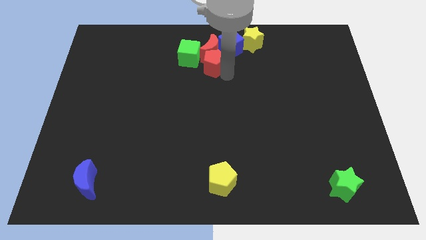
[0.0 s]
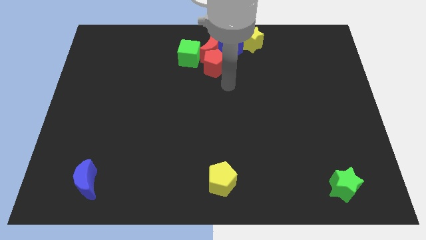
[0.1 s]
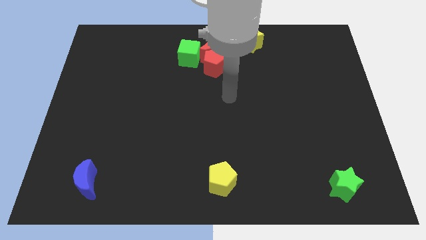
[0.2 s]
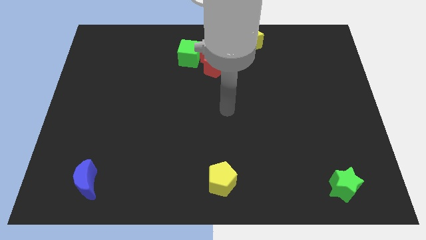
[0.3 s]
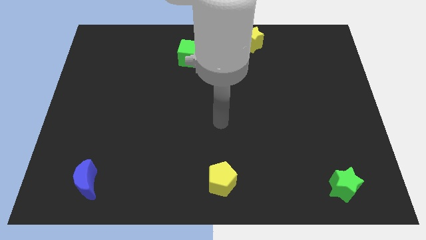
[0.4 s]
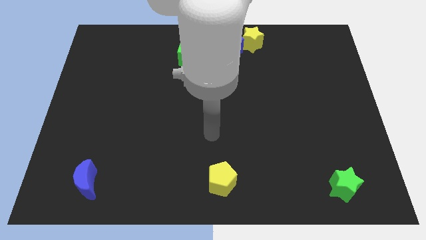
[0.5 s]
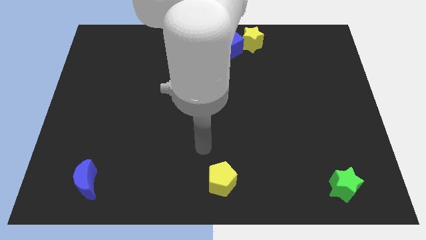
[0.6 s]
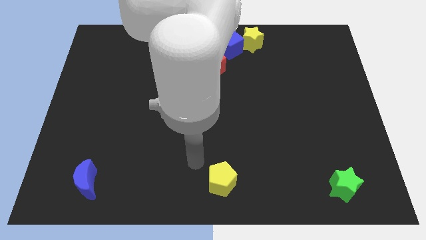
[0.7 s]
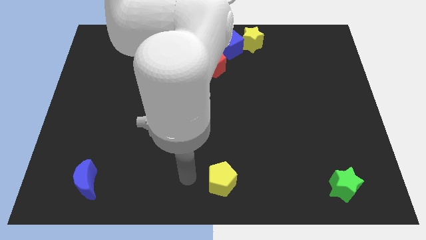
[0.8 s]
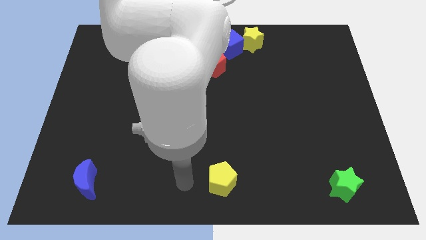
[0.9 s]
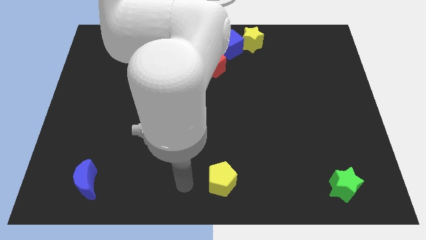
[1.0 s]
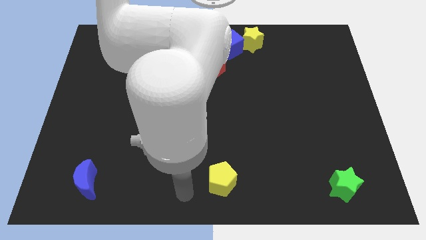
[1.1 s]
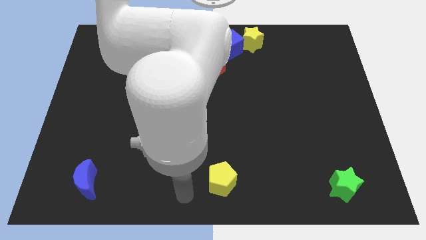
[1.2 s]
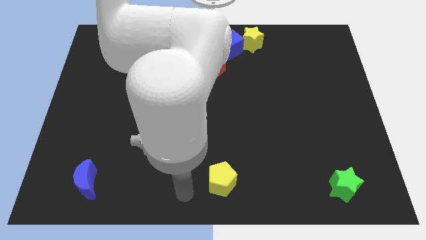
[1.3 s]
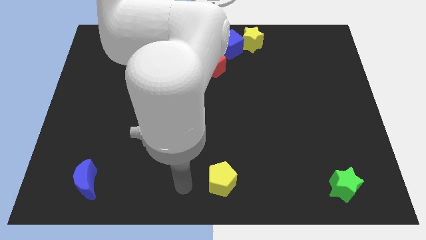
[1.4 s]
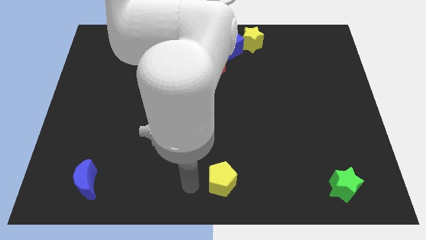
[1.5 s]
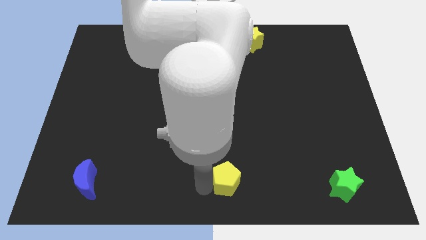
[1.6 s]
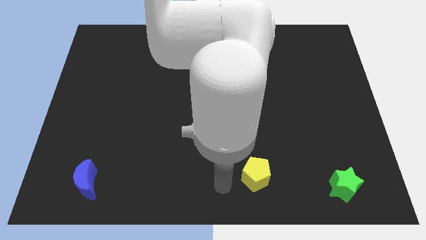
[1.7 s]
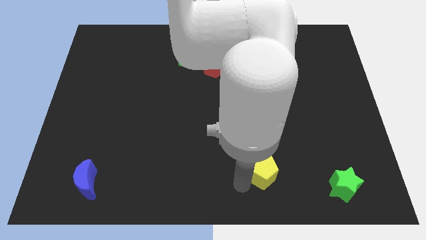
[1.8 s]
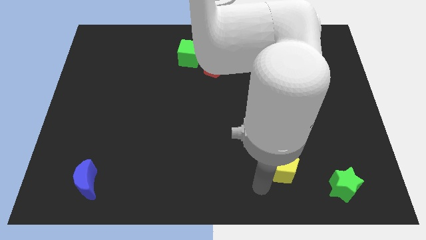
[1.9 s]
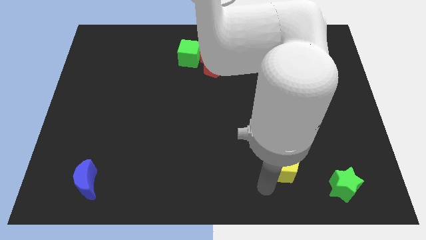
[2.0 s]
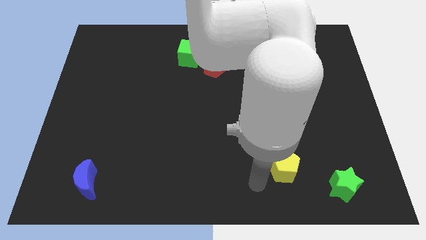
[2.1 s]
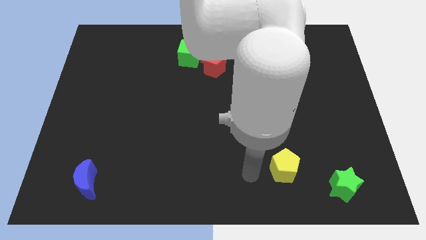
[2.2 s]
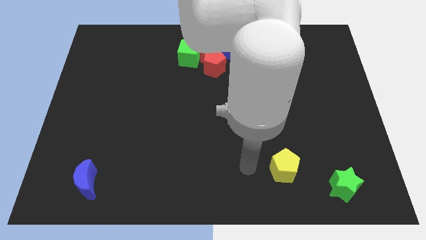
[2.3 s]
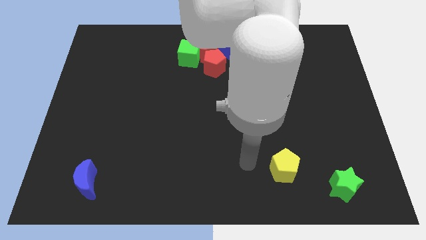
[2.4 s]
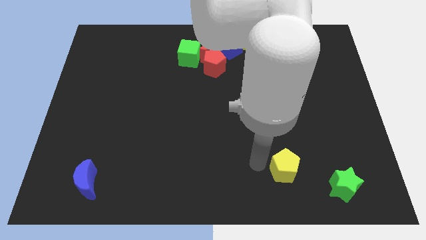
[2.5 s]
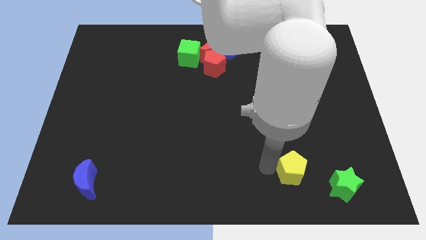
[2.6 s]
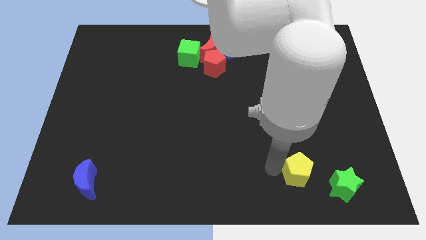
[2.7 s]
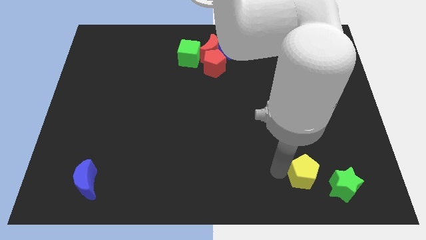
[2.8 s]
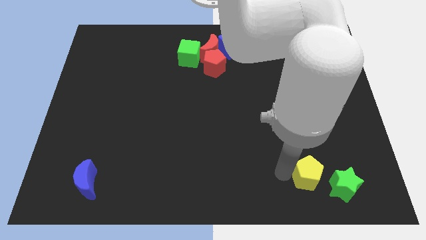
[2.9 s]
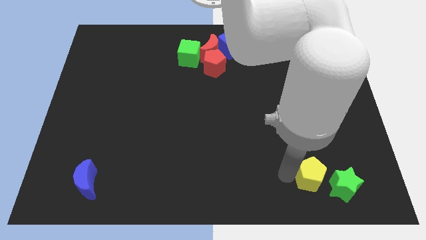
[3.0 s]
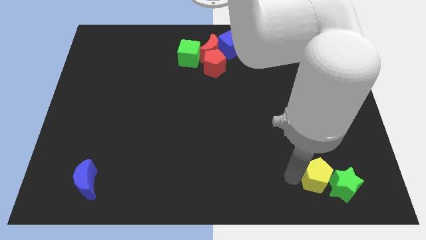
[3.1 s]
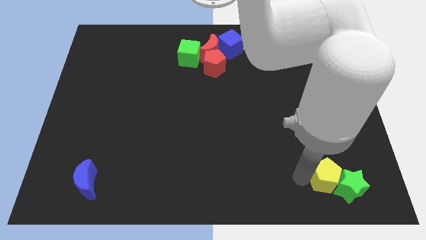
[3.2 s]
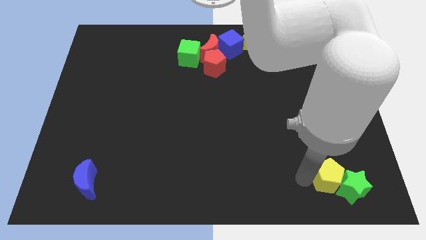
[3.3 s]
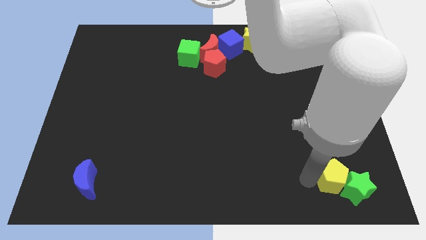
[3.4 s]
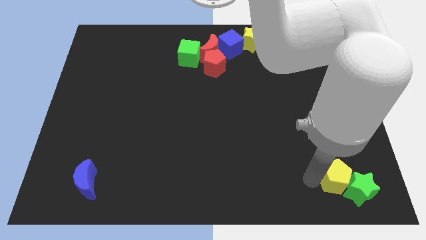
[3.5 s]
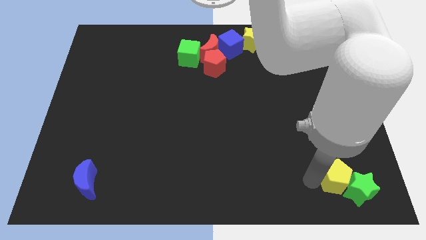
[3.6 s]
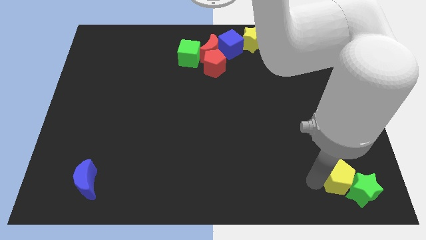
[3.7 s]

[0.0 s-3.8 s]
push the yellow pentagon into the left side of the green star

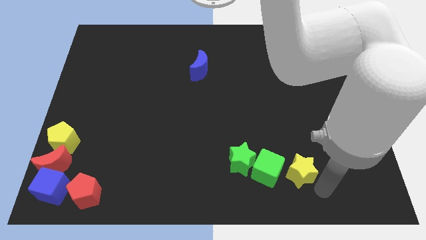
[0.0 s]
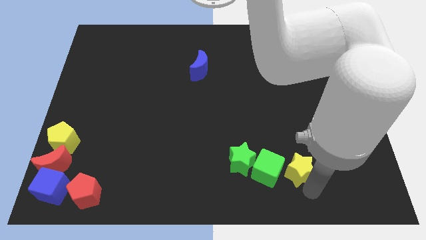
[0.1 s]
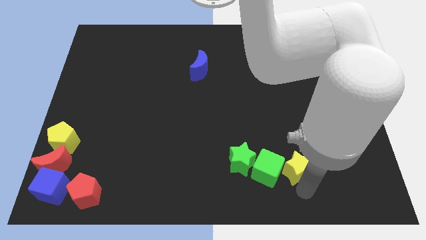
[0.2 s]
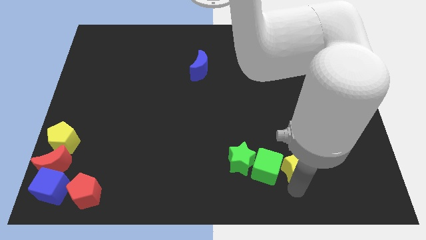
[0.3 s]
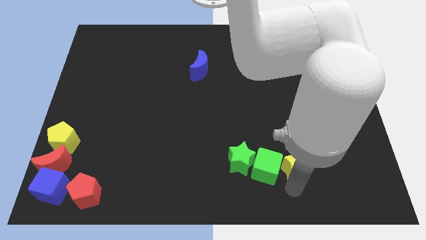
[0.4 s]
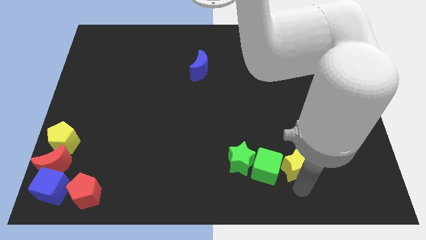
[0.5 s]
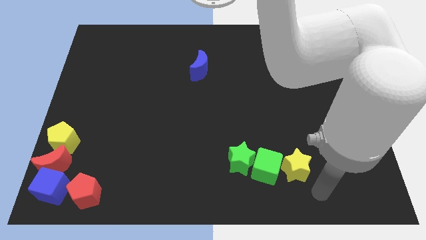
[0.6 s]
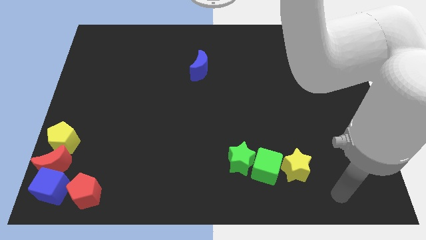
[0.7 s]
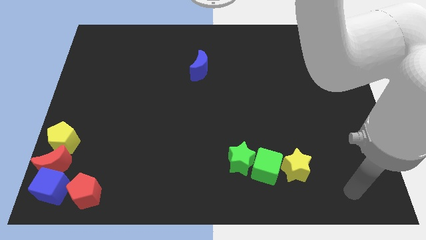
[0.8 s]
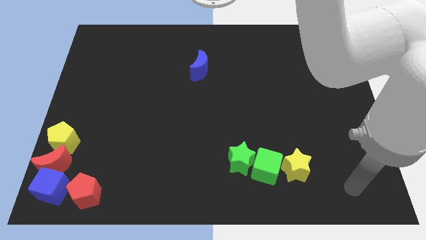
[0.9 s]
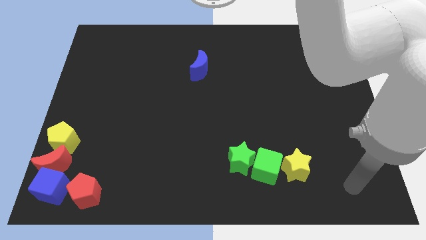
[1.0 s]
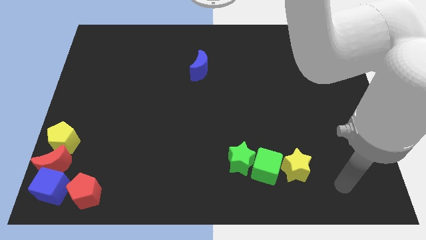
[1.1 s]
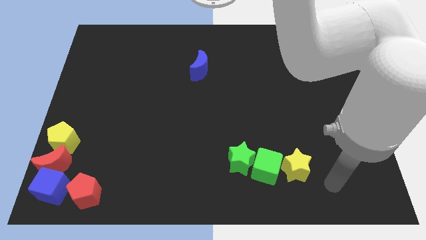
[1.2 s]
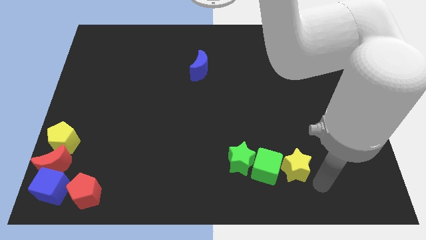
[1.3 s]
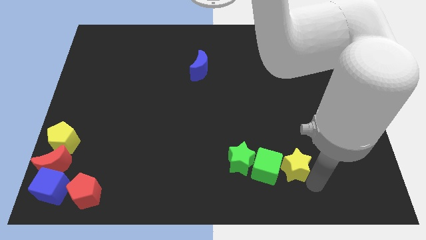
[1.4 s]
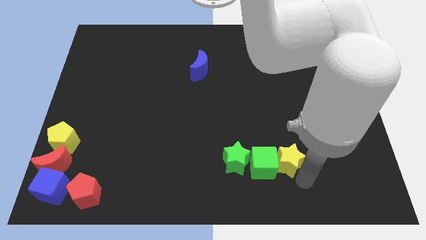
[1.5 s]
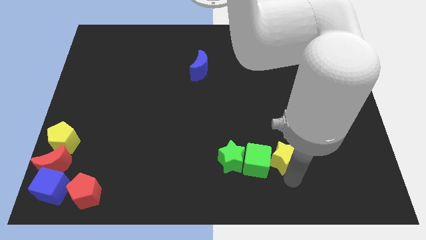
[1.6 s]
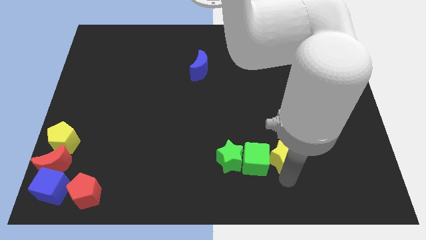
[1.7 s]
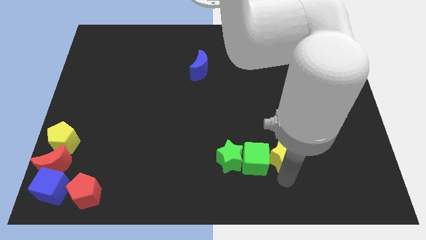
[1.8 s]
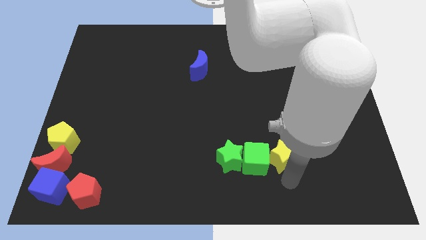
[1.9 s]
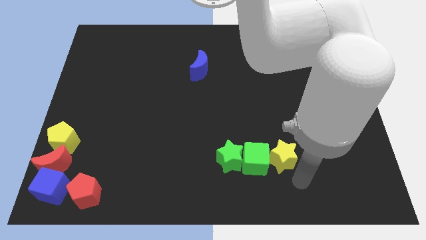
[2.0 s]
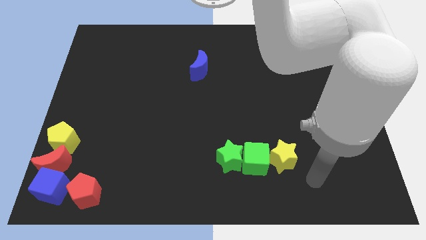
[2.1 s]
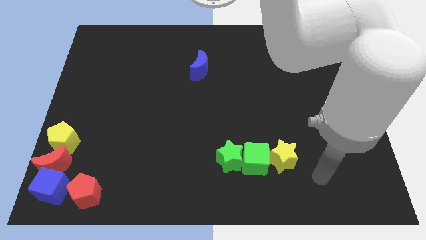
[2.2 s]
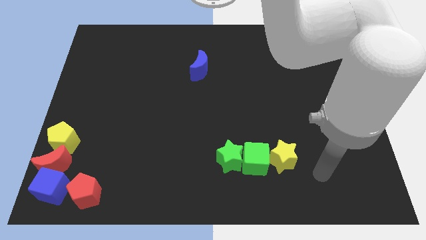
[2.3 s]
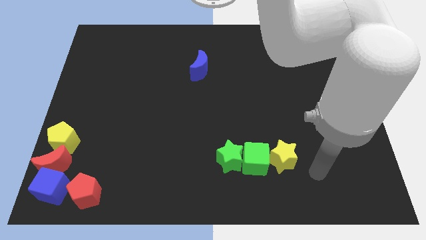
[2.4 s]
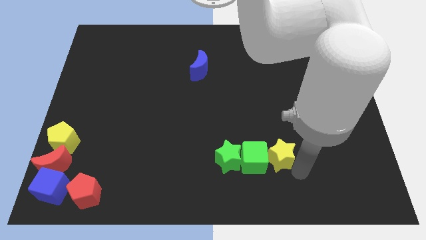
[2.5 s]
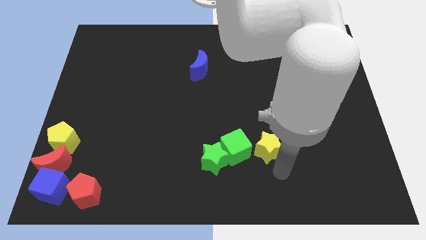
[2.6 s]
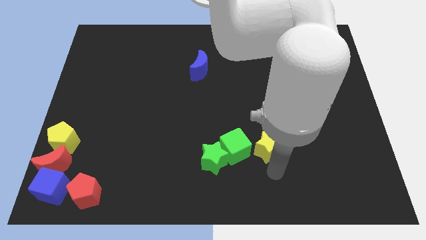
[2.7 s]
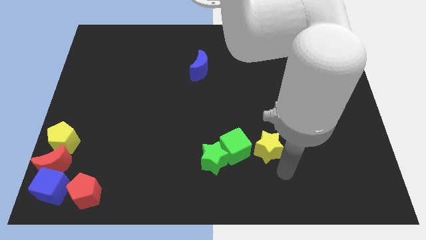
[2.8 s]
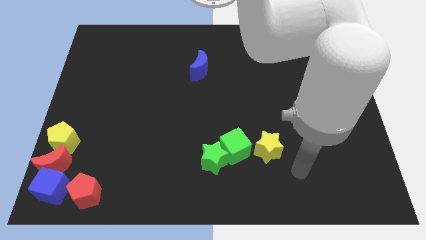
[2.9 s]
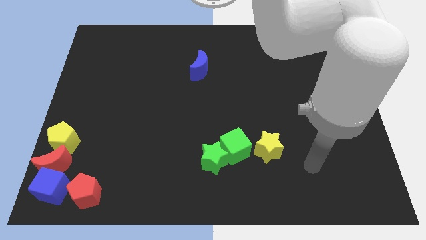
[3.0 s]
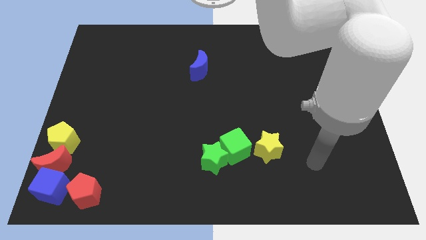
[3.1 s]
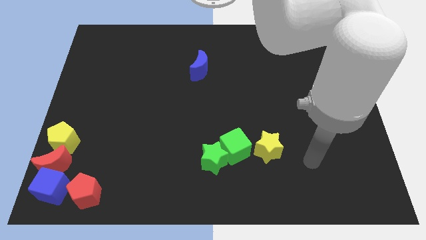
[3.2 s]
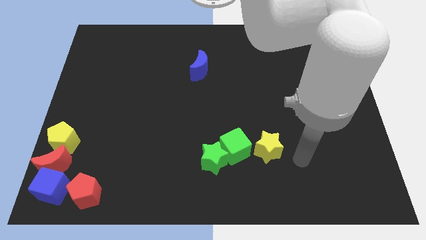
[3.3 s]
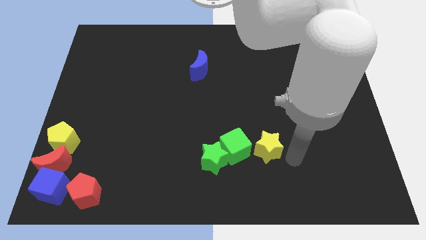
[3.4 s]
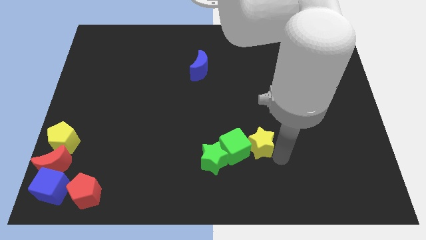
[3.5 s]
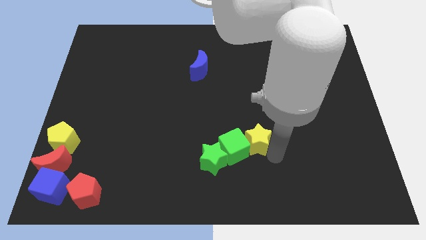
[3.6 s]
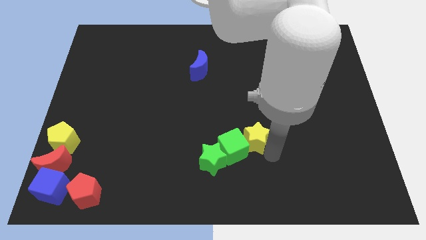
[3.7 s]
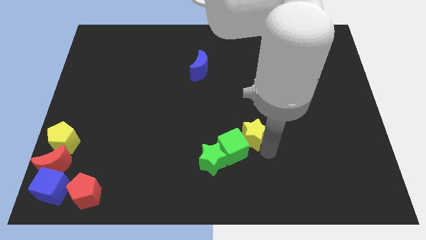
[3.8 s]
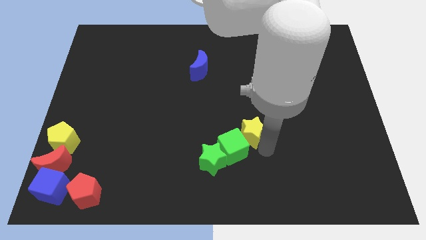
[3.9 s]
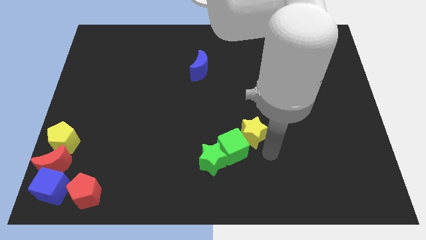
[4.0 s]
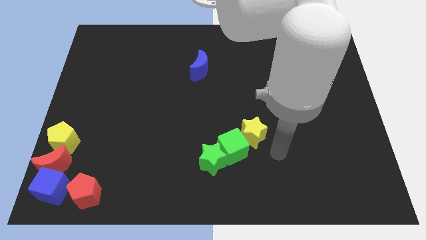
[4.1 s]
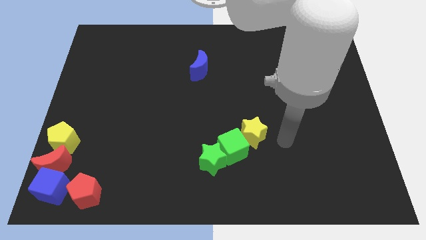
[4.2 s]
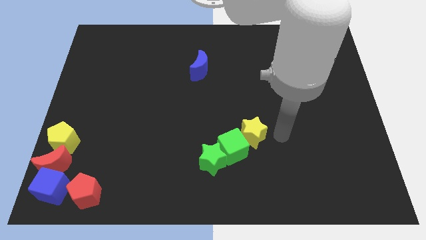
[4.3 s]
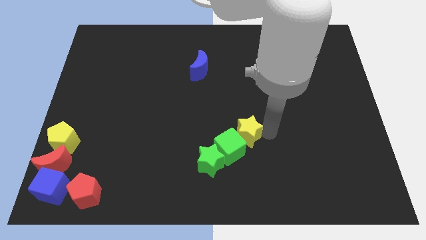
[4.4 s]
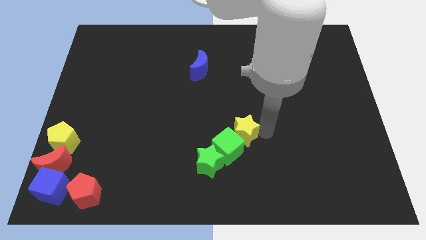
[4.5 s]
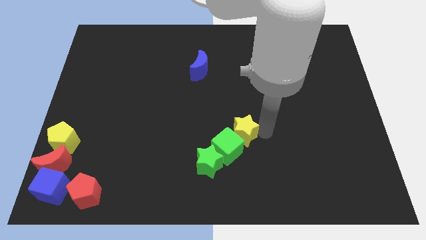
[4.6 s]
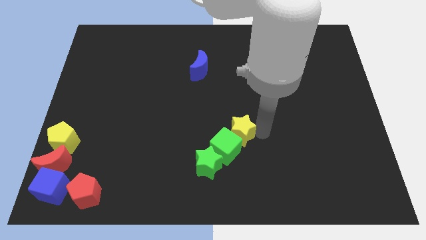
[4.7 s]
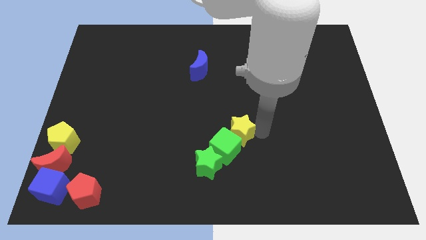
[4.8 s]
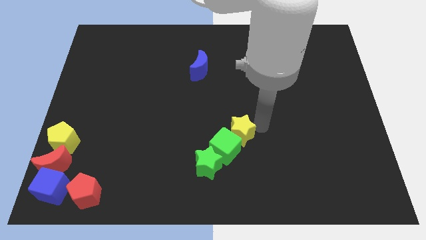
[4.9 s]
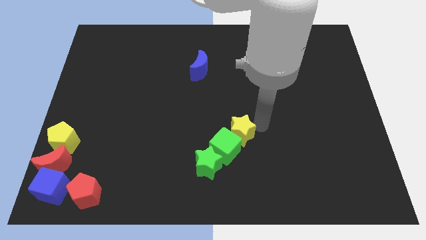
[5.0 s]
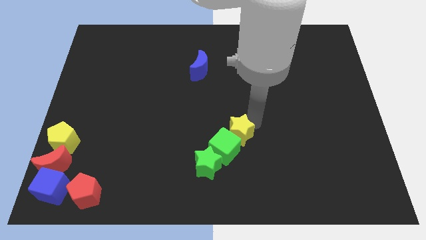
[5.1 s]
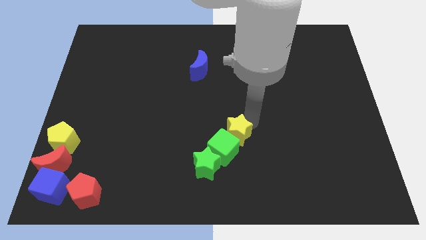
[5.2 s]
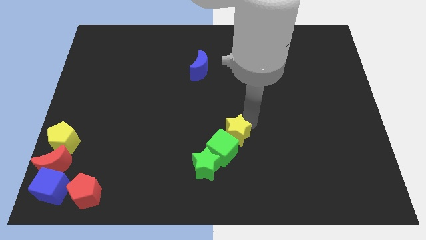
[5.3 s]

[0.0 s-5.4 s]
slightly move the yellow star along with green blocks towards bottom center of the board
